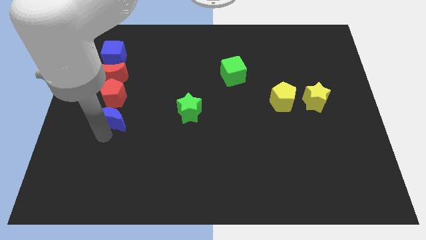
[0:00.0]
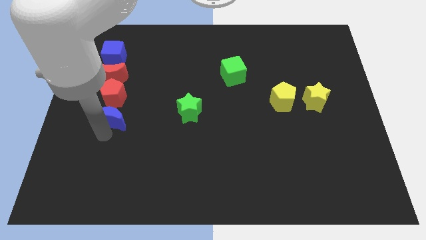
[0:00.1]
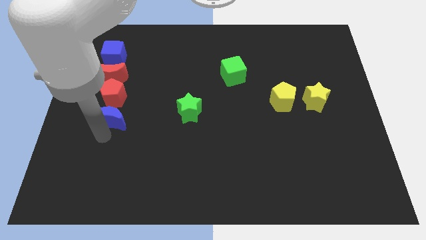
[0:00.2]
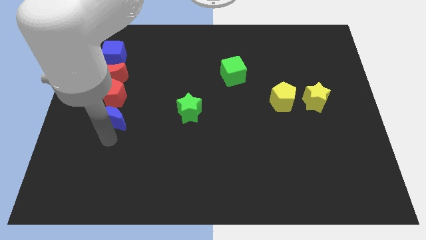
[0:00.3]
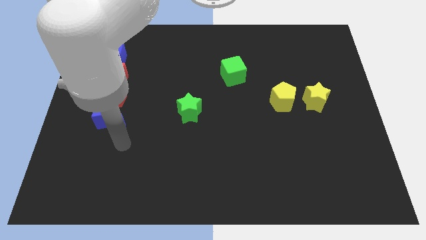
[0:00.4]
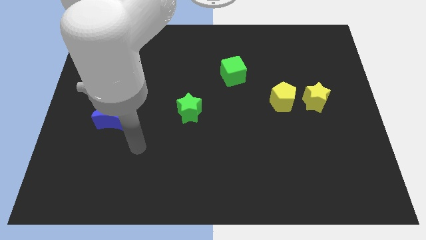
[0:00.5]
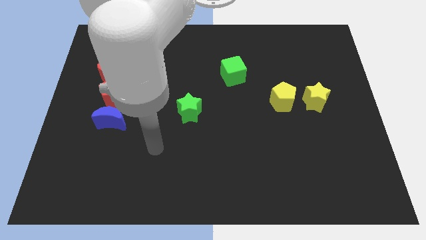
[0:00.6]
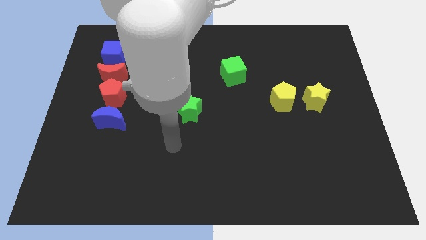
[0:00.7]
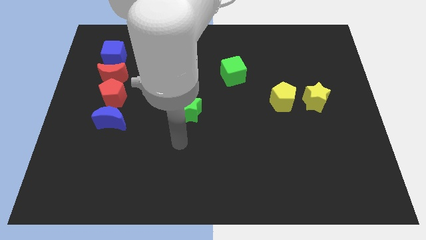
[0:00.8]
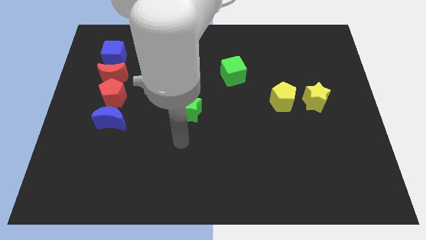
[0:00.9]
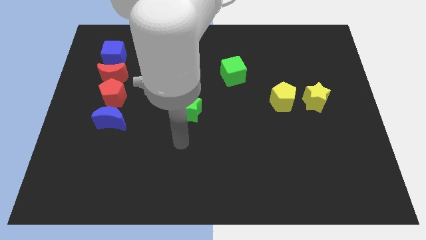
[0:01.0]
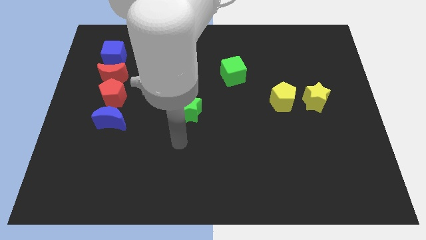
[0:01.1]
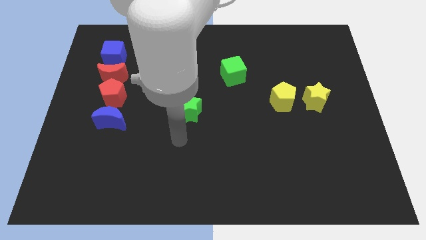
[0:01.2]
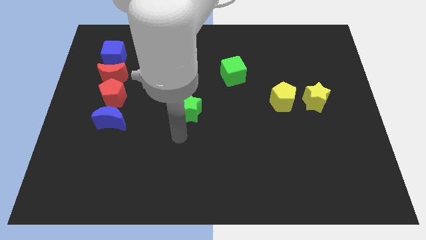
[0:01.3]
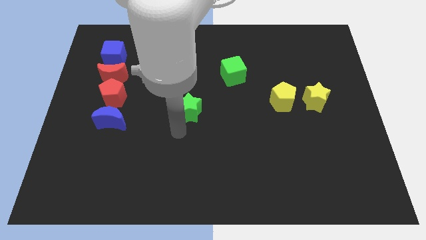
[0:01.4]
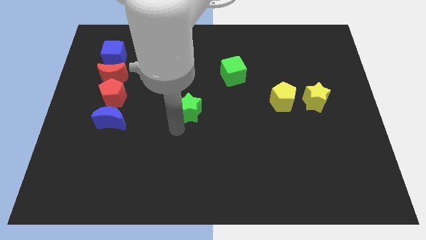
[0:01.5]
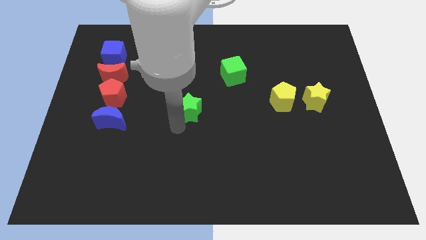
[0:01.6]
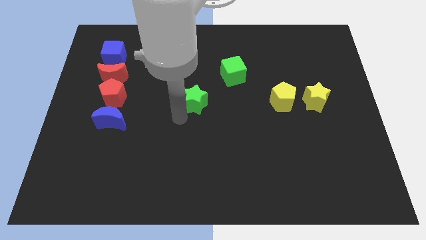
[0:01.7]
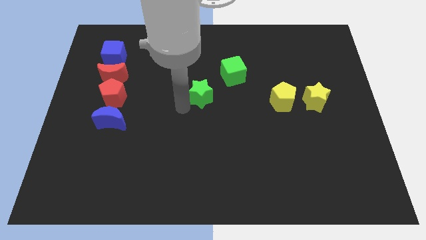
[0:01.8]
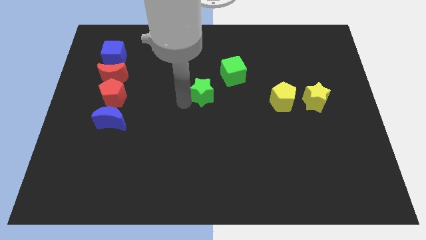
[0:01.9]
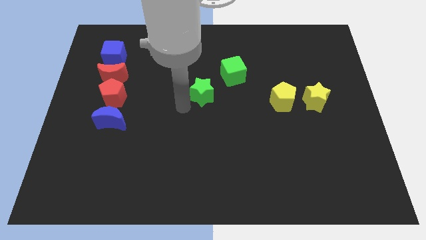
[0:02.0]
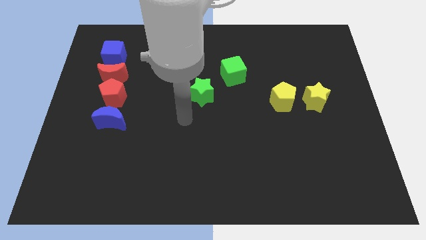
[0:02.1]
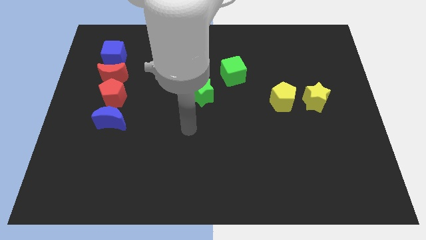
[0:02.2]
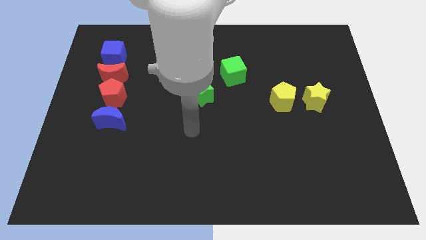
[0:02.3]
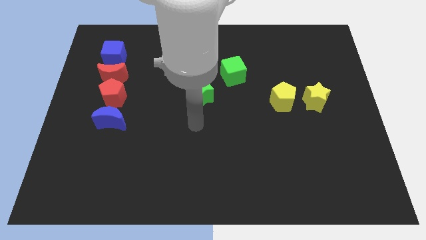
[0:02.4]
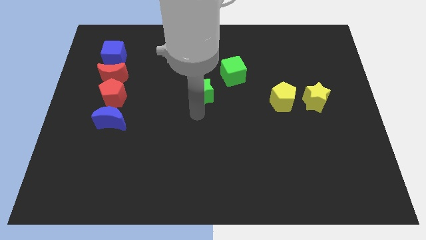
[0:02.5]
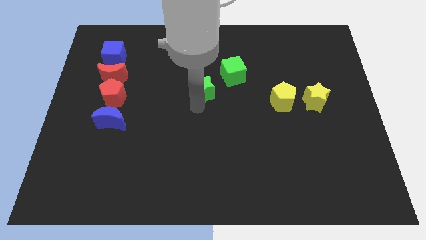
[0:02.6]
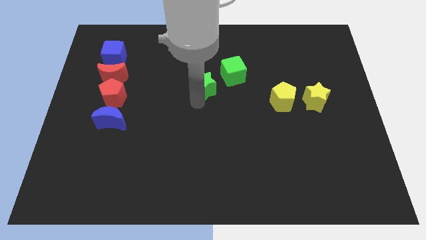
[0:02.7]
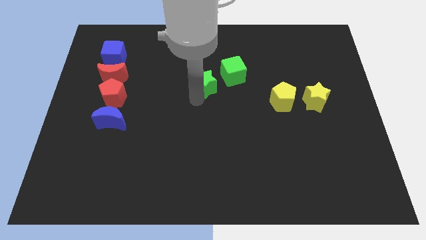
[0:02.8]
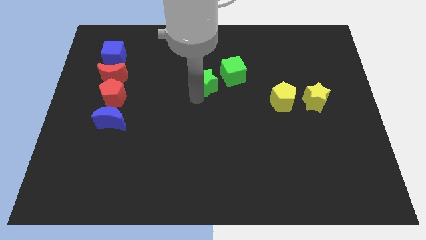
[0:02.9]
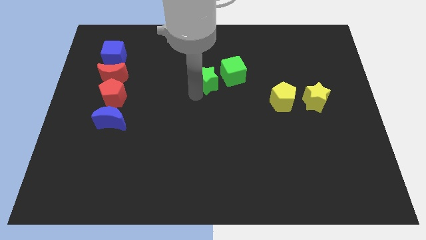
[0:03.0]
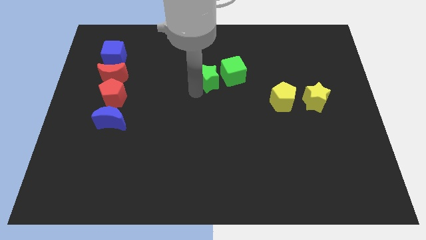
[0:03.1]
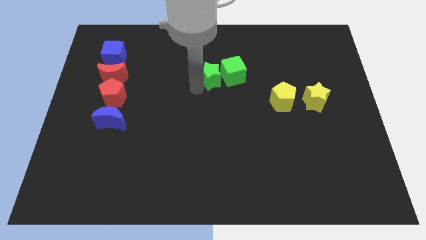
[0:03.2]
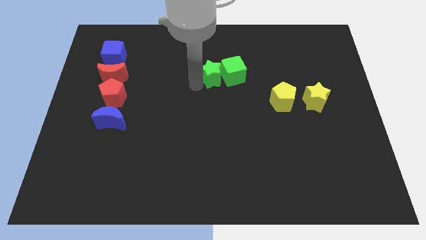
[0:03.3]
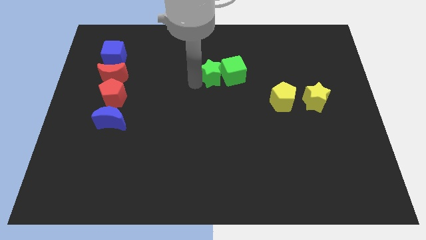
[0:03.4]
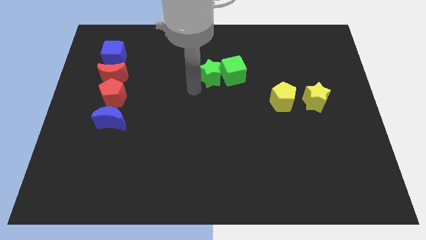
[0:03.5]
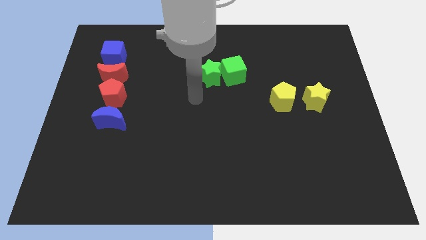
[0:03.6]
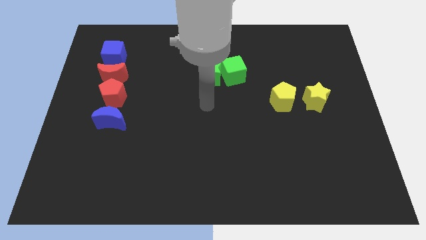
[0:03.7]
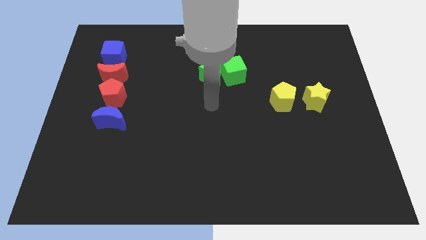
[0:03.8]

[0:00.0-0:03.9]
place the green star in between the green cube and red moon

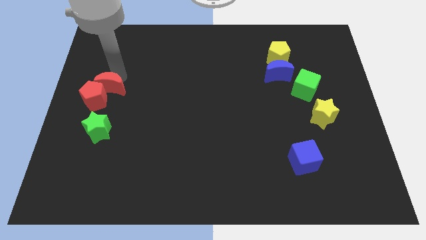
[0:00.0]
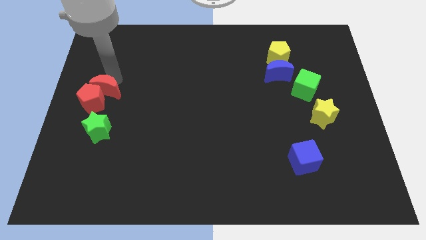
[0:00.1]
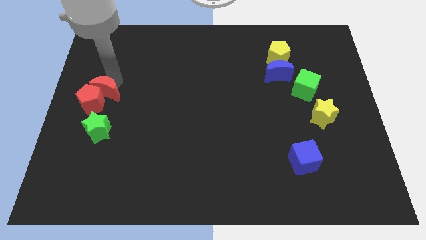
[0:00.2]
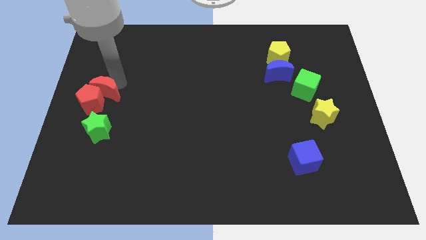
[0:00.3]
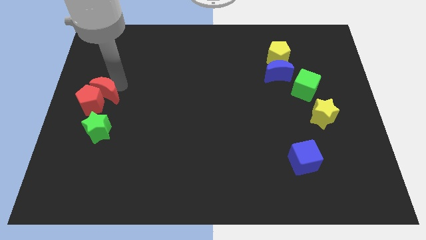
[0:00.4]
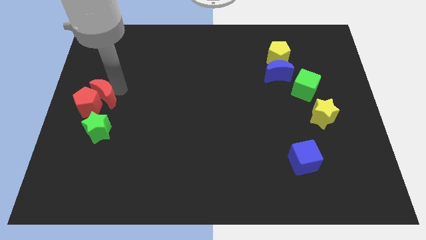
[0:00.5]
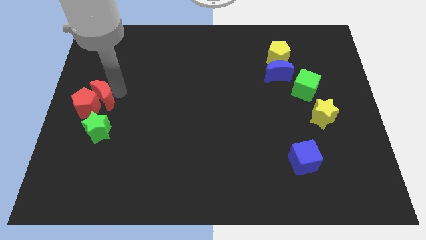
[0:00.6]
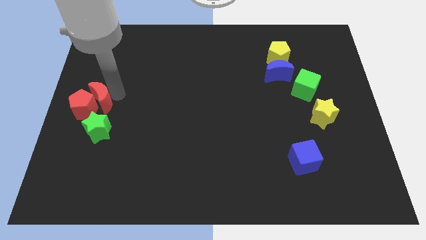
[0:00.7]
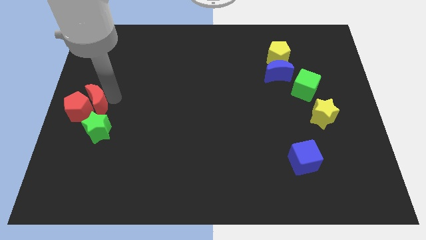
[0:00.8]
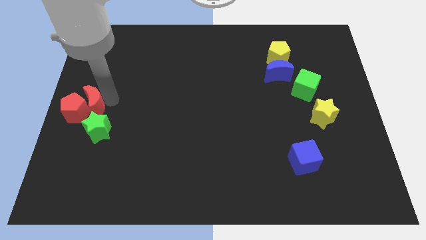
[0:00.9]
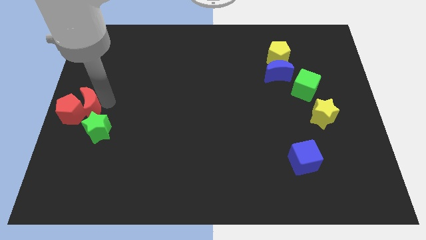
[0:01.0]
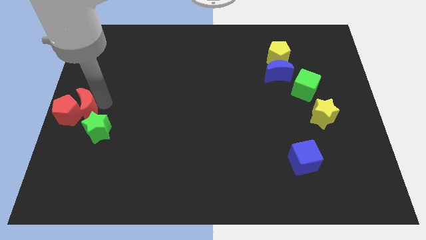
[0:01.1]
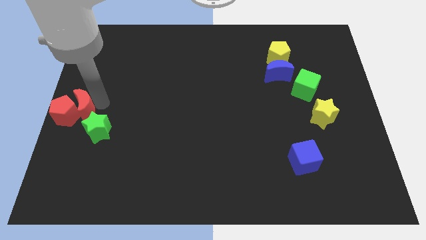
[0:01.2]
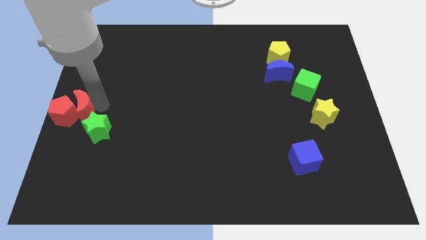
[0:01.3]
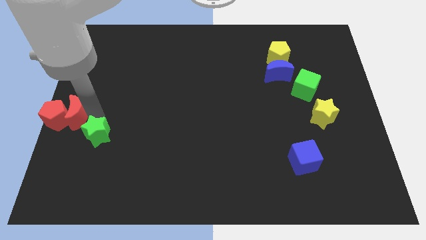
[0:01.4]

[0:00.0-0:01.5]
put the group of red blocks to the center left of the board

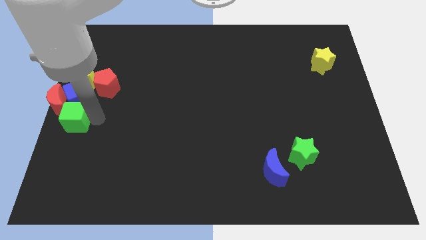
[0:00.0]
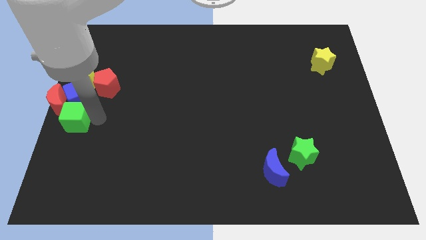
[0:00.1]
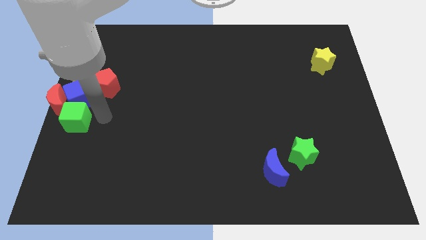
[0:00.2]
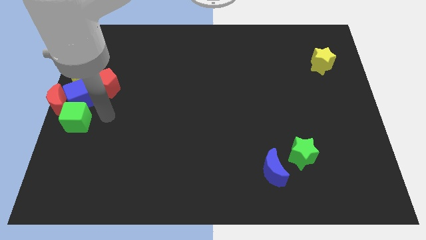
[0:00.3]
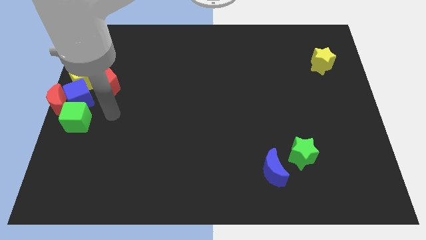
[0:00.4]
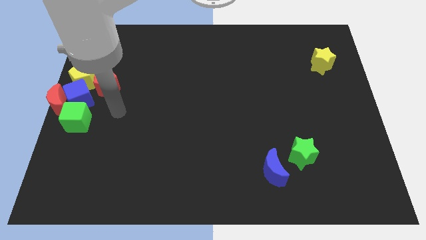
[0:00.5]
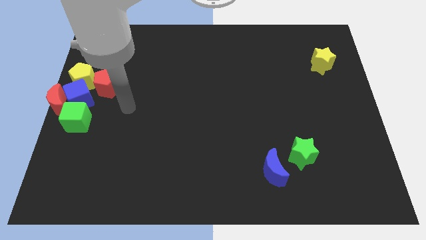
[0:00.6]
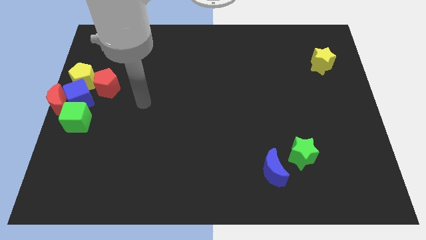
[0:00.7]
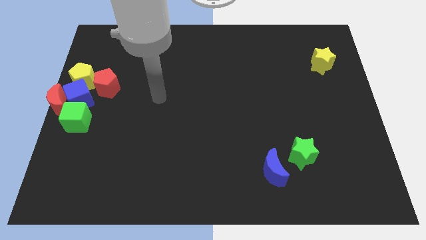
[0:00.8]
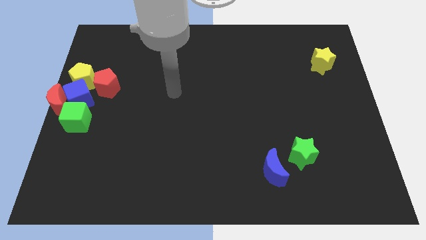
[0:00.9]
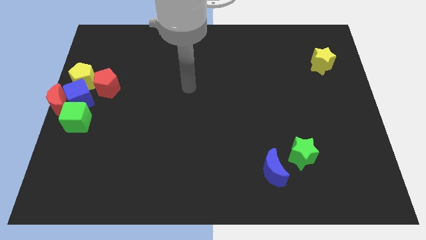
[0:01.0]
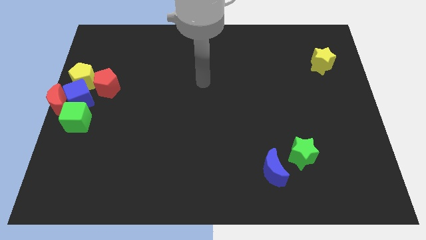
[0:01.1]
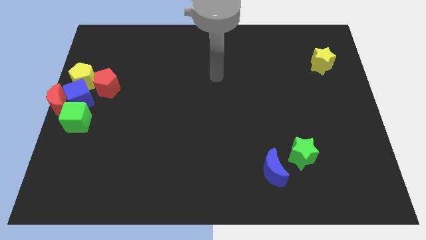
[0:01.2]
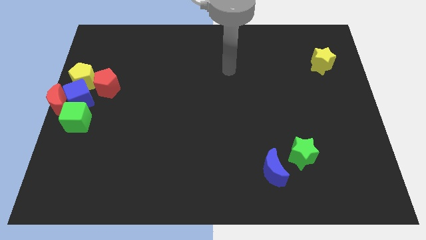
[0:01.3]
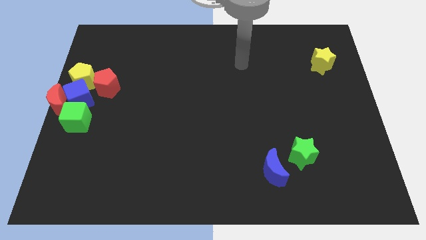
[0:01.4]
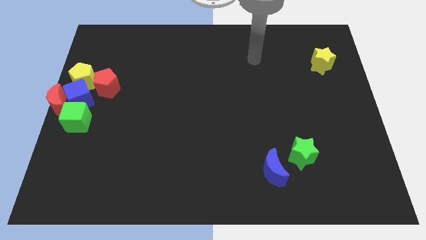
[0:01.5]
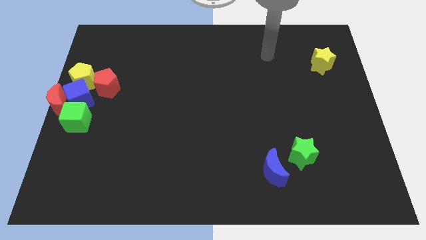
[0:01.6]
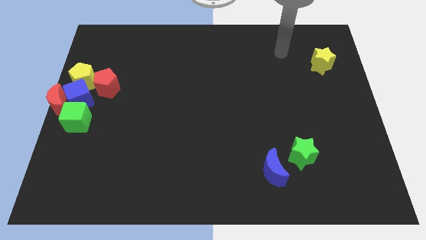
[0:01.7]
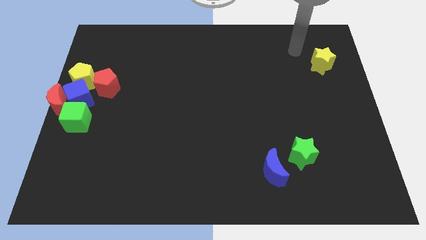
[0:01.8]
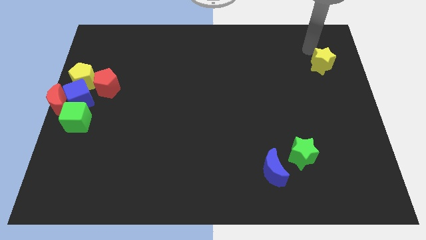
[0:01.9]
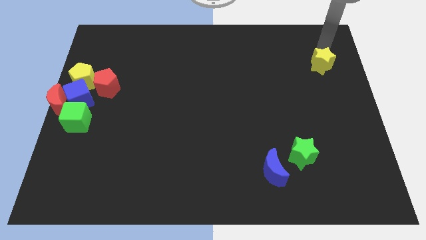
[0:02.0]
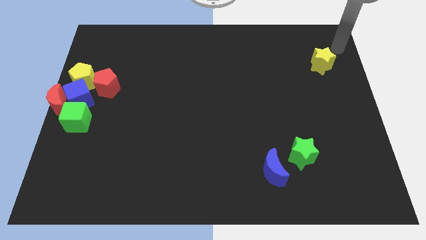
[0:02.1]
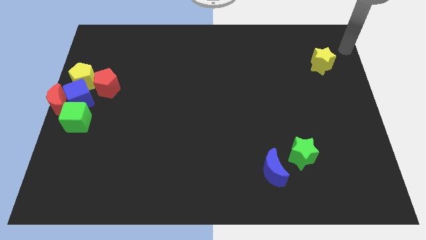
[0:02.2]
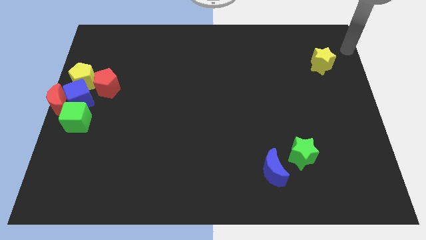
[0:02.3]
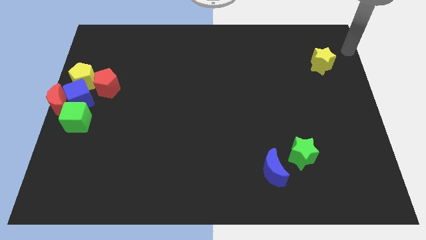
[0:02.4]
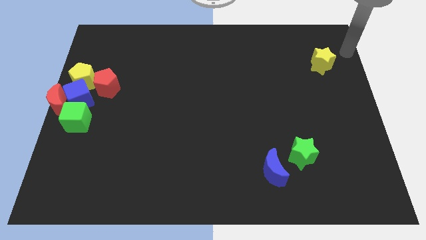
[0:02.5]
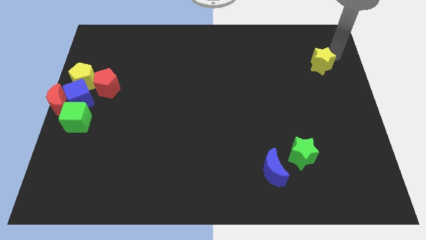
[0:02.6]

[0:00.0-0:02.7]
move your arm above to the yellow star

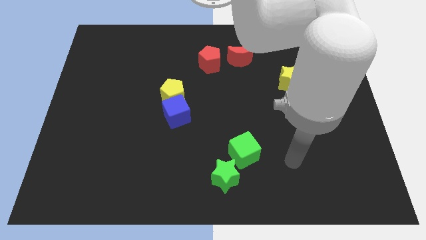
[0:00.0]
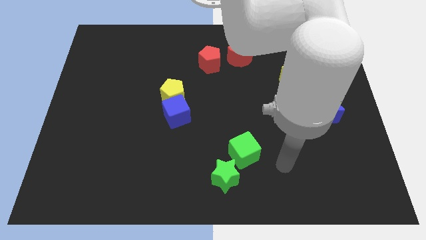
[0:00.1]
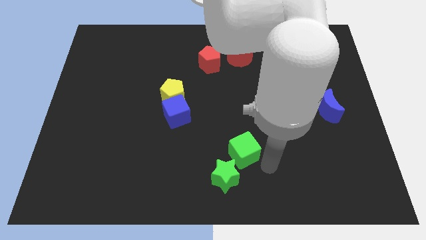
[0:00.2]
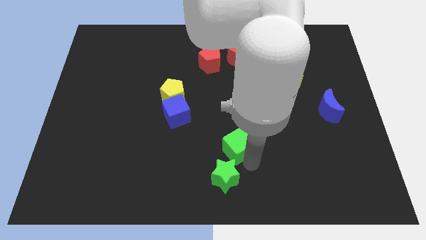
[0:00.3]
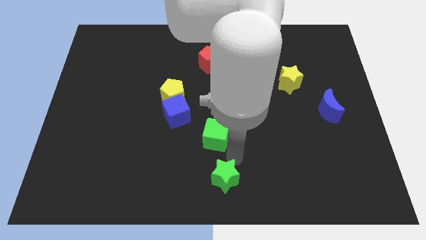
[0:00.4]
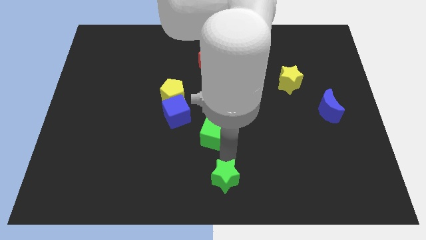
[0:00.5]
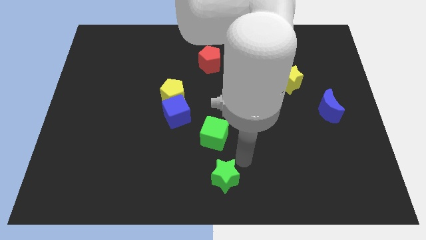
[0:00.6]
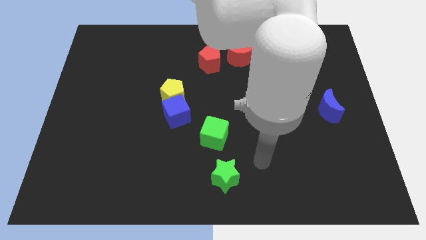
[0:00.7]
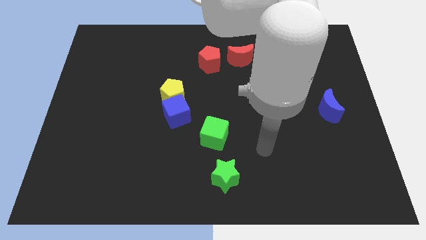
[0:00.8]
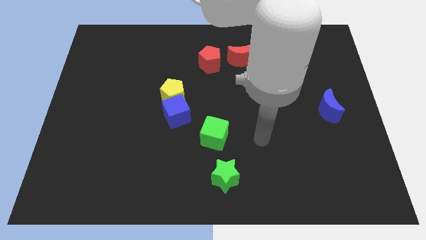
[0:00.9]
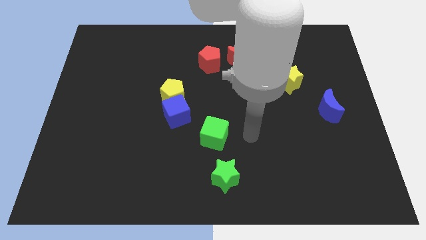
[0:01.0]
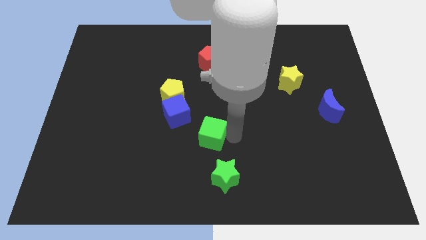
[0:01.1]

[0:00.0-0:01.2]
move green cube to the bottom right of blue cube
